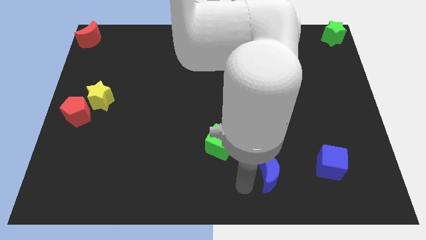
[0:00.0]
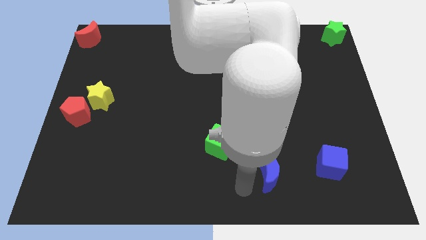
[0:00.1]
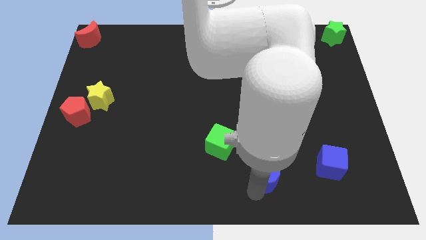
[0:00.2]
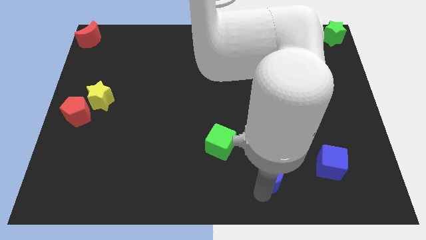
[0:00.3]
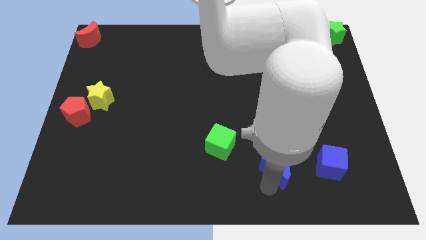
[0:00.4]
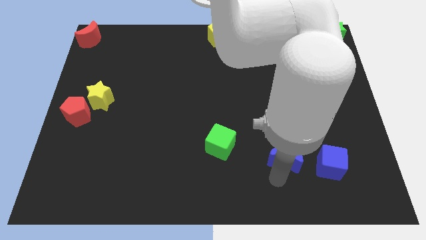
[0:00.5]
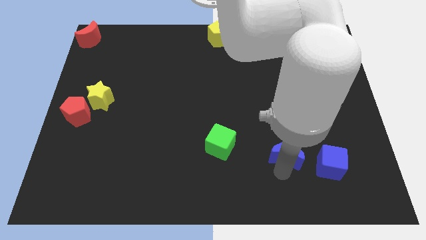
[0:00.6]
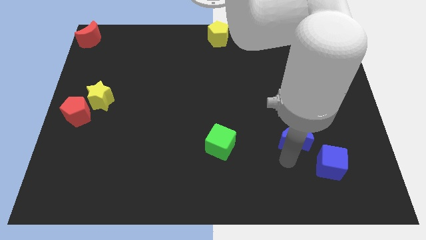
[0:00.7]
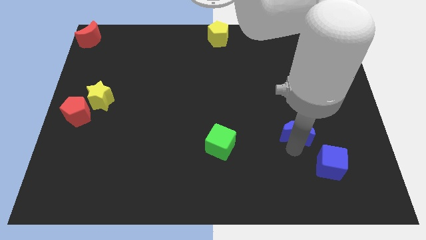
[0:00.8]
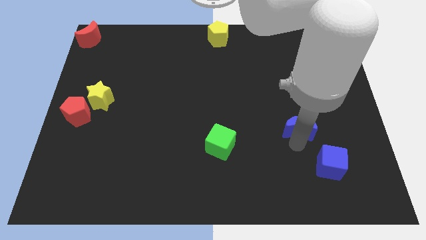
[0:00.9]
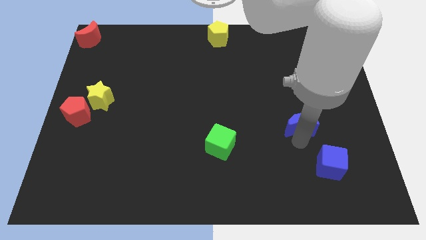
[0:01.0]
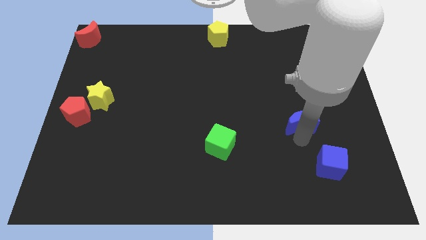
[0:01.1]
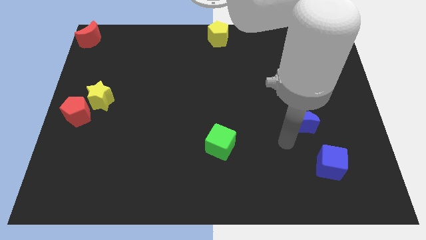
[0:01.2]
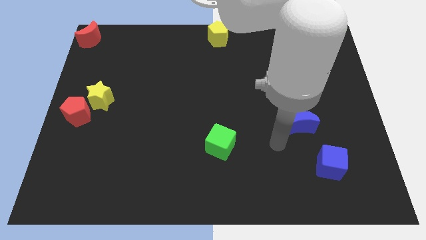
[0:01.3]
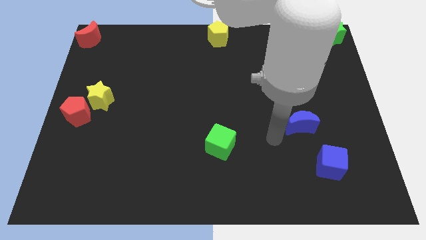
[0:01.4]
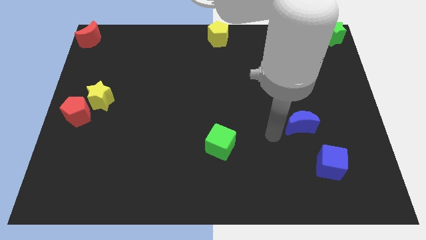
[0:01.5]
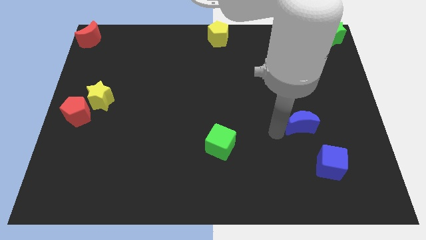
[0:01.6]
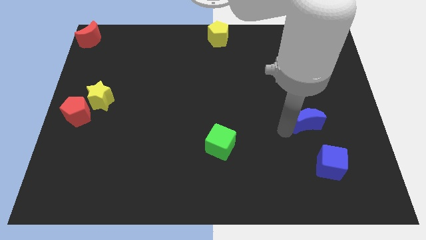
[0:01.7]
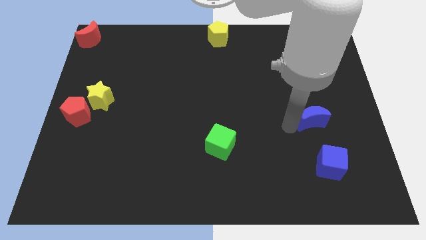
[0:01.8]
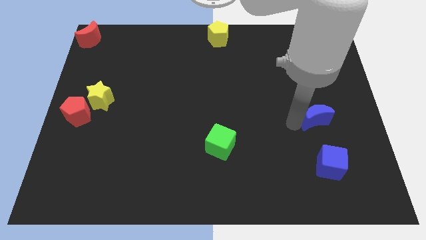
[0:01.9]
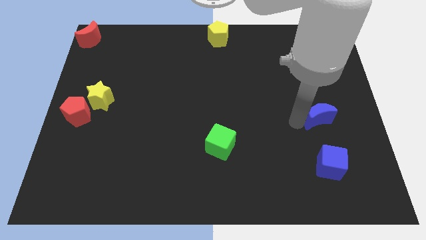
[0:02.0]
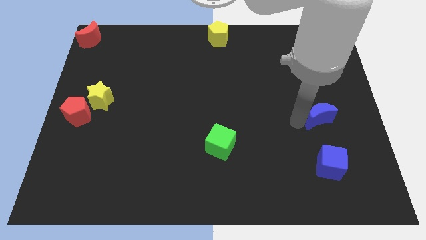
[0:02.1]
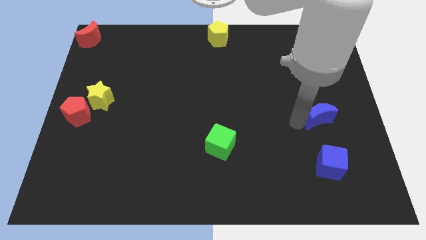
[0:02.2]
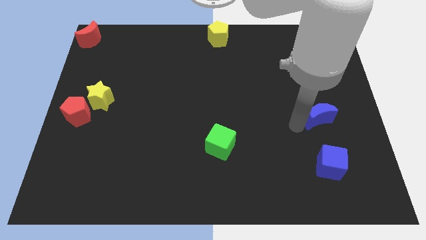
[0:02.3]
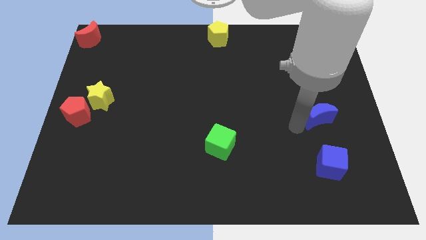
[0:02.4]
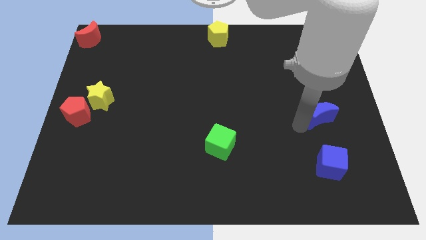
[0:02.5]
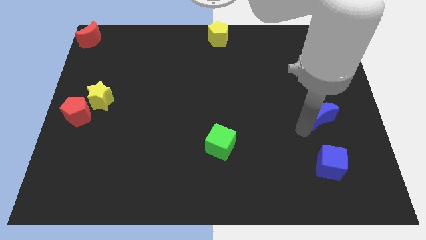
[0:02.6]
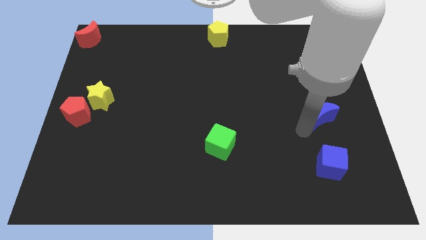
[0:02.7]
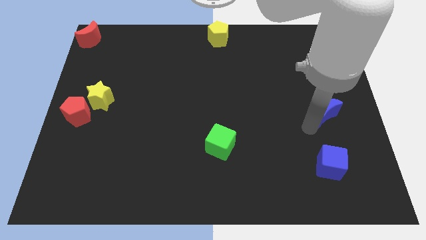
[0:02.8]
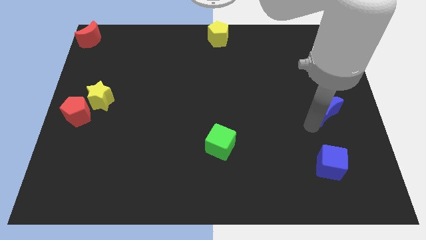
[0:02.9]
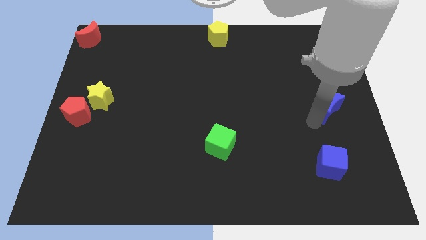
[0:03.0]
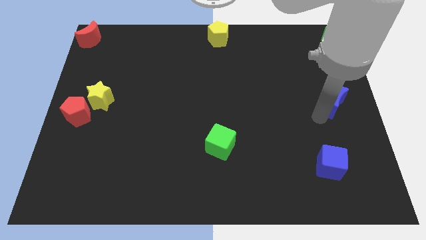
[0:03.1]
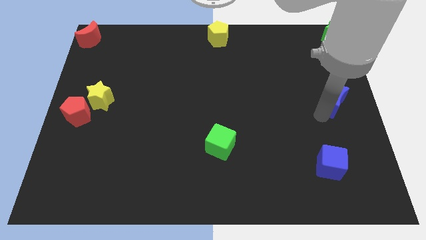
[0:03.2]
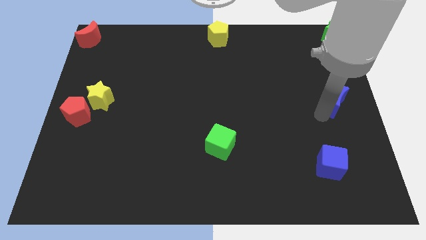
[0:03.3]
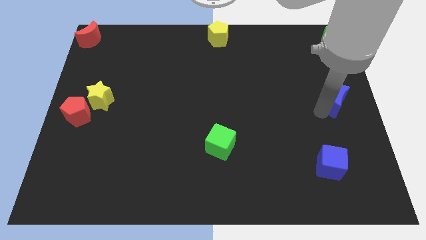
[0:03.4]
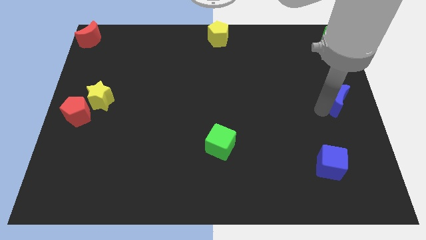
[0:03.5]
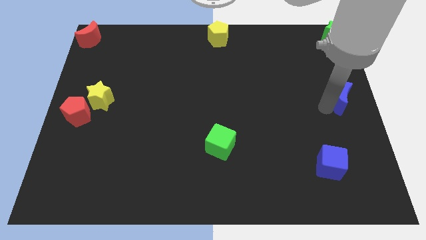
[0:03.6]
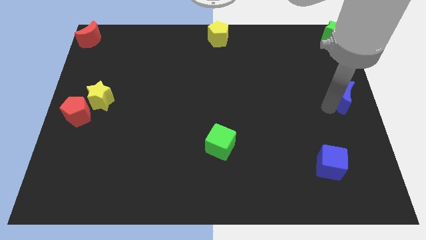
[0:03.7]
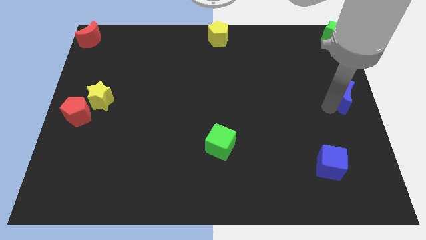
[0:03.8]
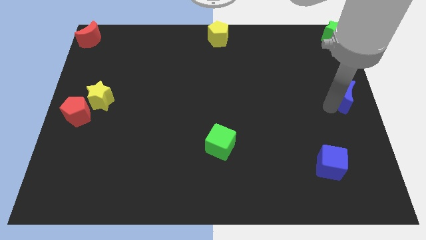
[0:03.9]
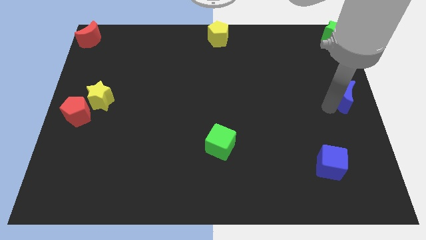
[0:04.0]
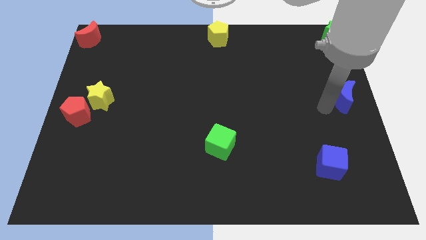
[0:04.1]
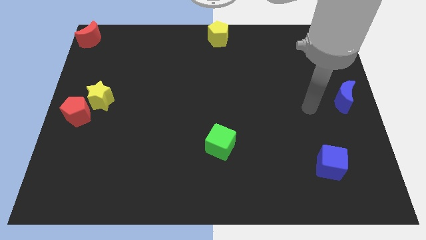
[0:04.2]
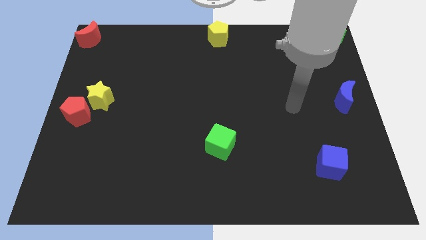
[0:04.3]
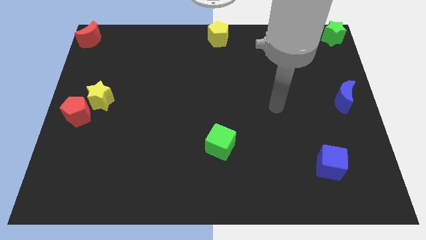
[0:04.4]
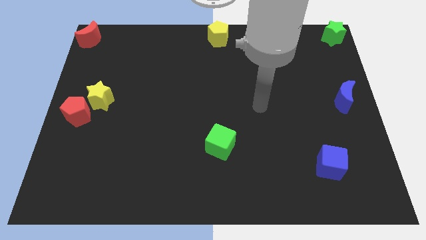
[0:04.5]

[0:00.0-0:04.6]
push the blue moon towards the right center of the board

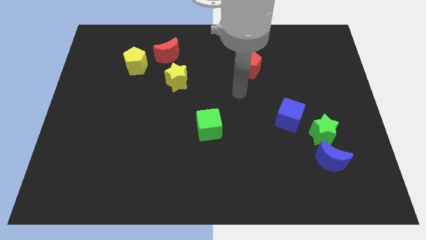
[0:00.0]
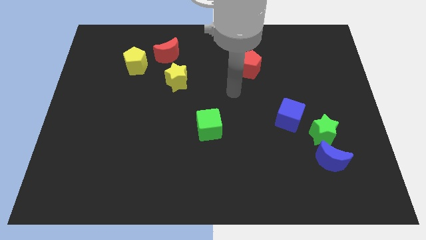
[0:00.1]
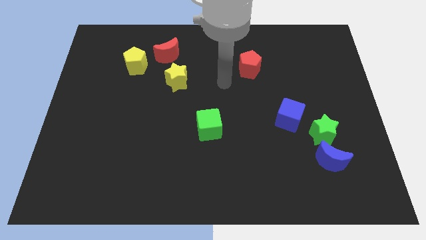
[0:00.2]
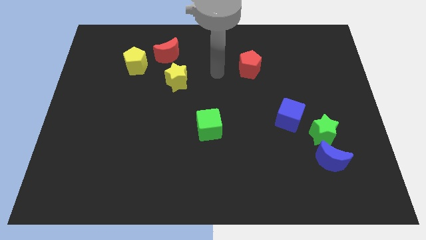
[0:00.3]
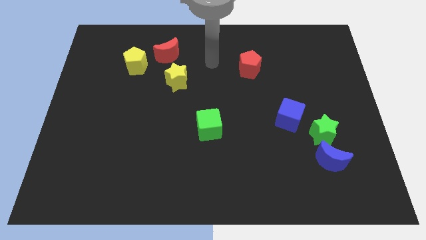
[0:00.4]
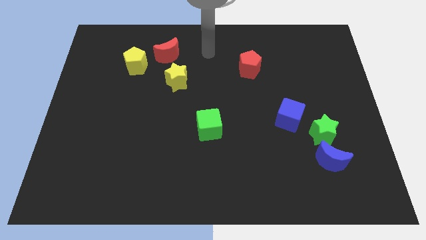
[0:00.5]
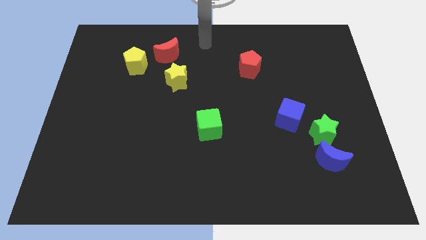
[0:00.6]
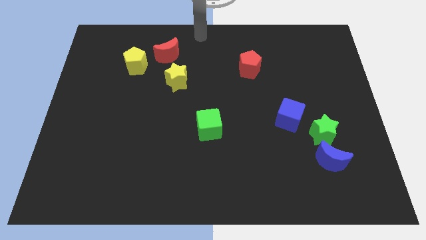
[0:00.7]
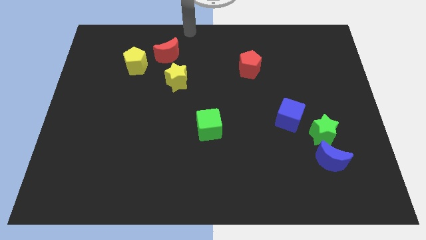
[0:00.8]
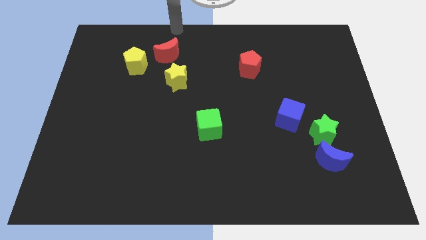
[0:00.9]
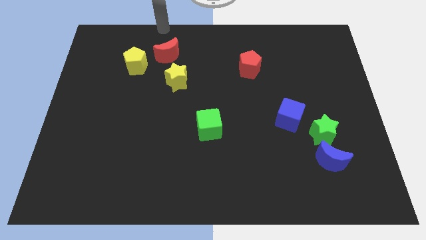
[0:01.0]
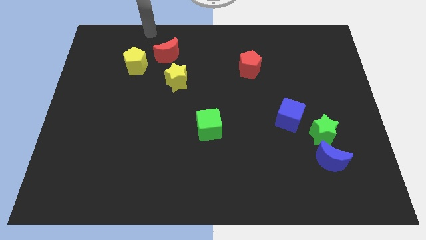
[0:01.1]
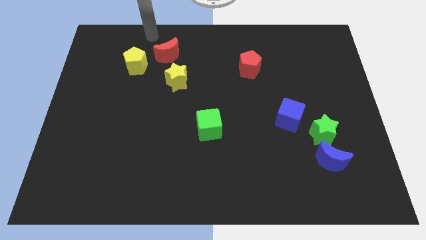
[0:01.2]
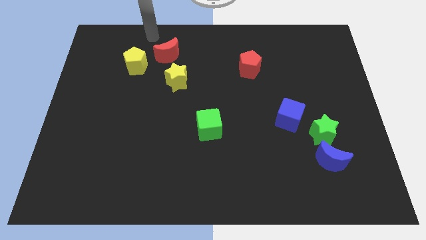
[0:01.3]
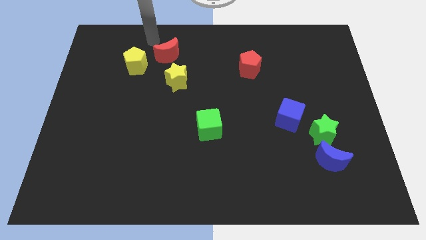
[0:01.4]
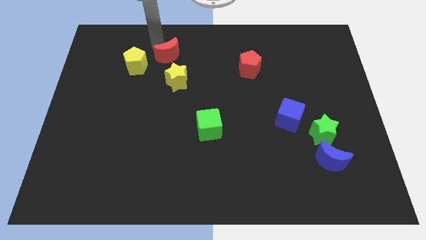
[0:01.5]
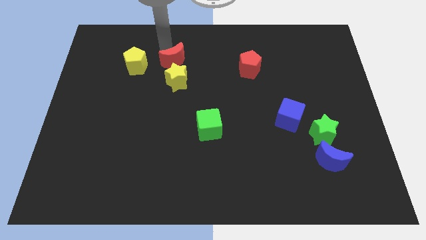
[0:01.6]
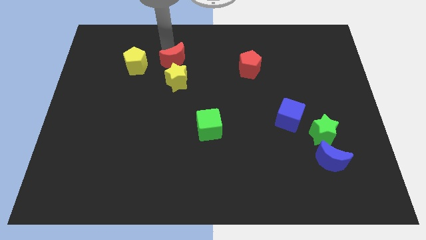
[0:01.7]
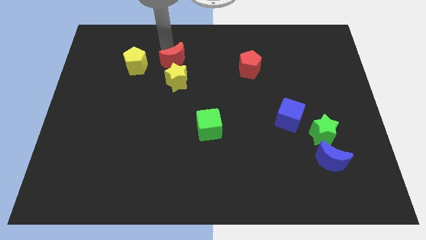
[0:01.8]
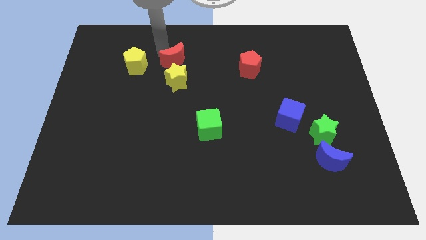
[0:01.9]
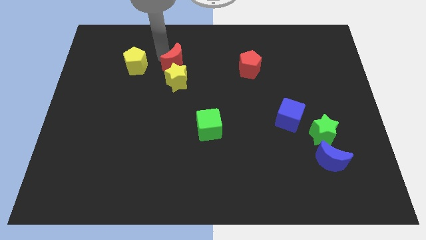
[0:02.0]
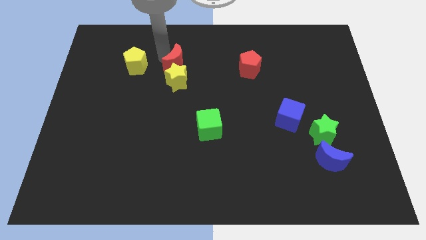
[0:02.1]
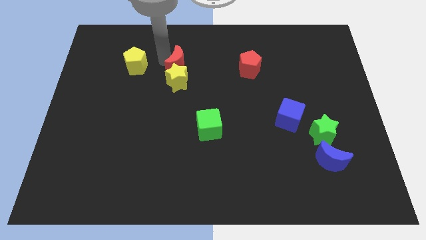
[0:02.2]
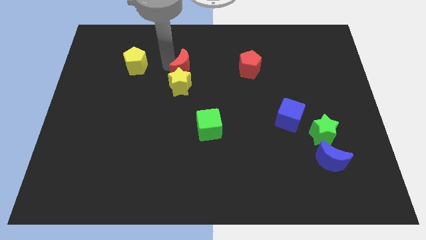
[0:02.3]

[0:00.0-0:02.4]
push red block into the yellow star

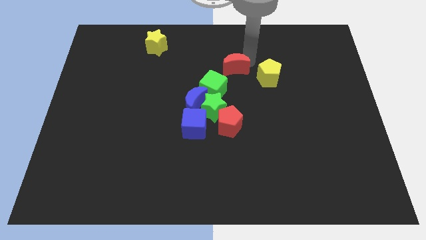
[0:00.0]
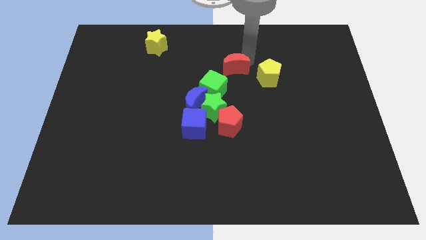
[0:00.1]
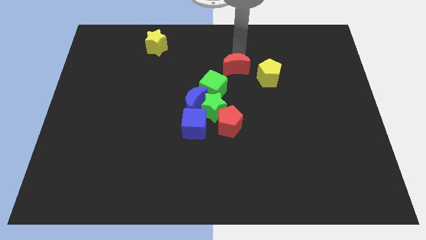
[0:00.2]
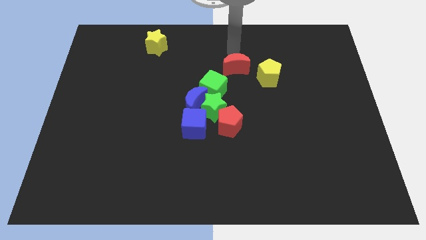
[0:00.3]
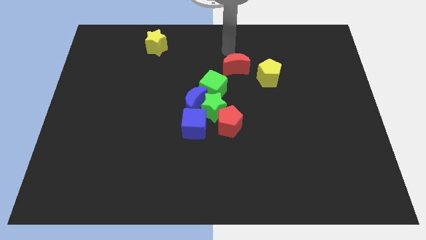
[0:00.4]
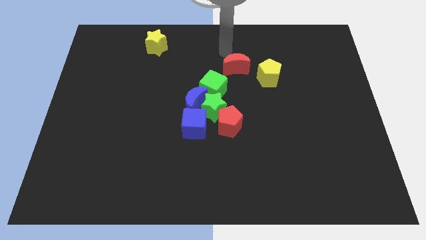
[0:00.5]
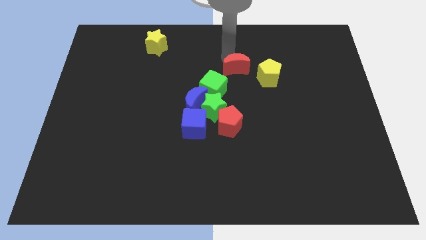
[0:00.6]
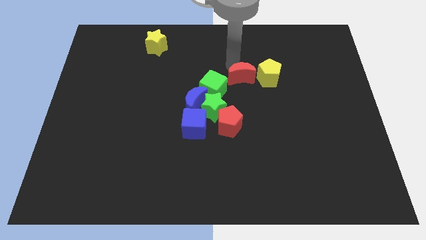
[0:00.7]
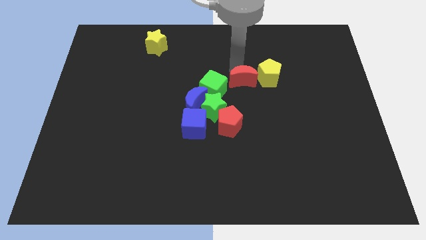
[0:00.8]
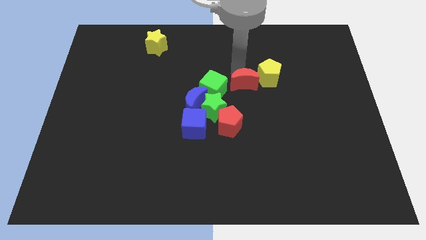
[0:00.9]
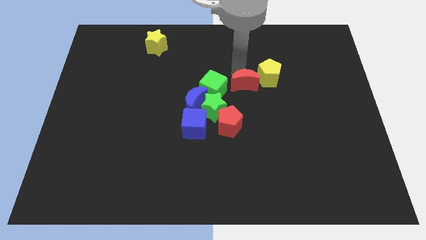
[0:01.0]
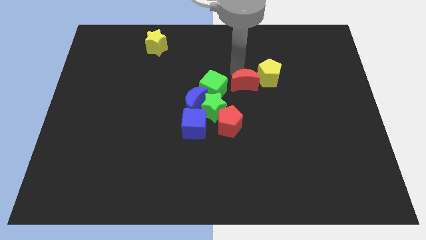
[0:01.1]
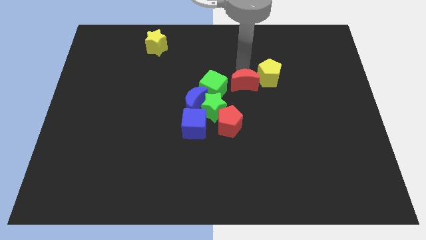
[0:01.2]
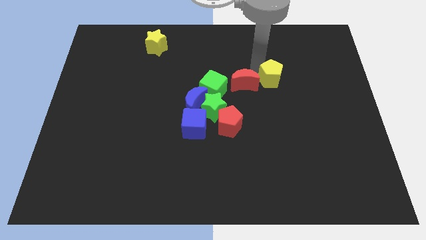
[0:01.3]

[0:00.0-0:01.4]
push the red moon to the right of the green cube

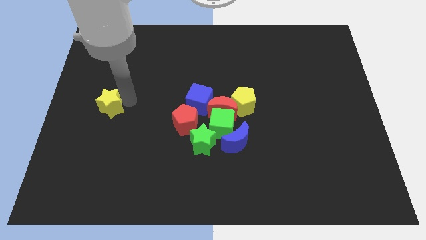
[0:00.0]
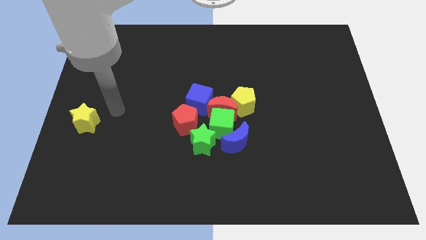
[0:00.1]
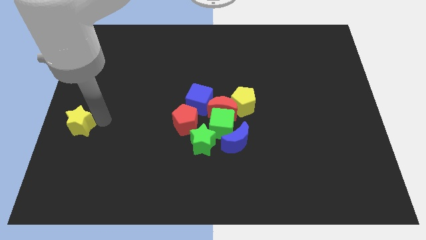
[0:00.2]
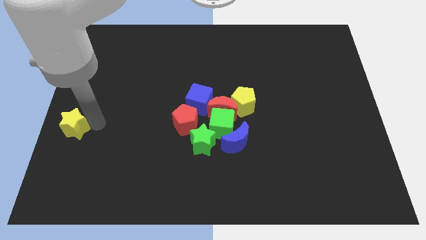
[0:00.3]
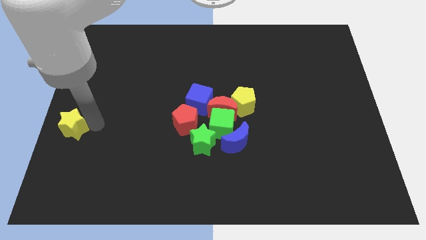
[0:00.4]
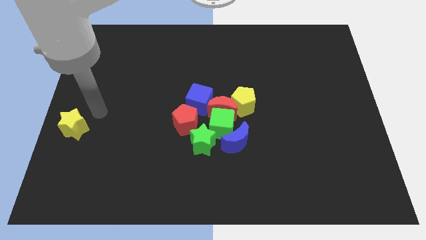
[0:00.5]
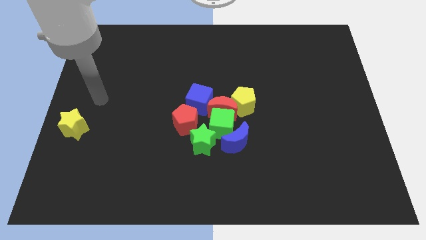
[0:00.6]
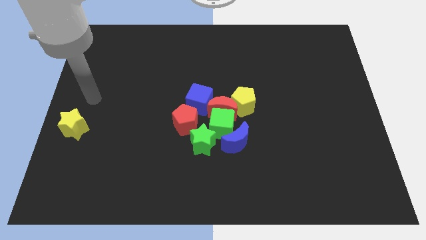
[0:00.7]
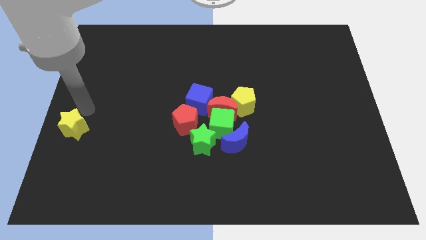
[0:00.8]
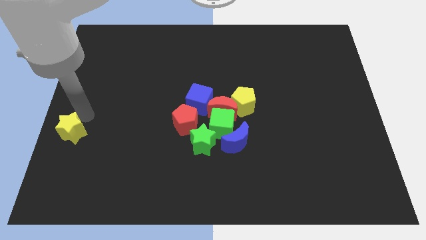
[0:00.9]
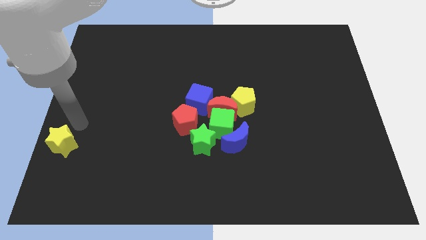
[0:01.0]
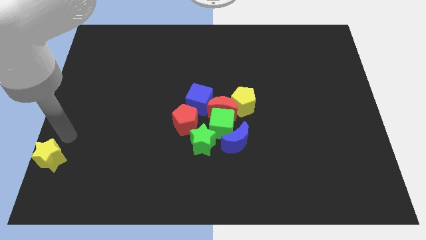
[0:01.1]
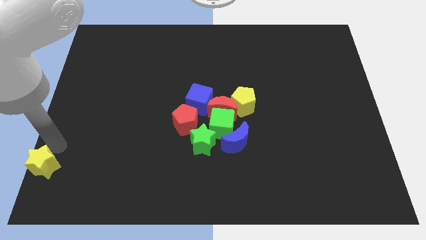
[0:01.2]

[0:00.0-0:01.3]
push yellow star slightly downwards
